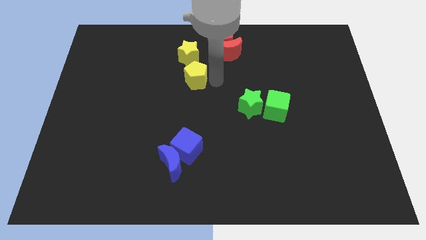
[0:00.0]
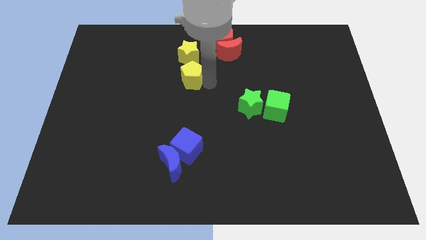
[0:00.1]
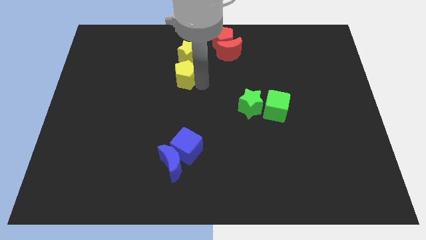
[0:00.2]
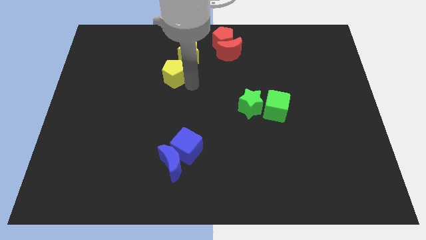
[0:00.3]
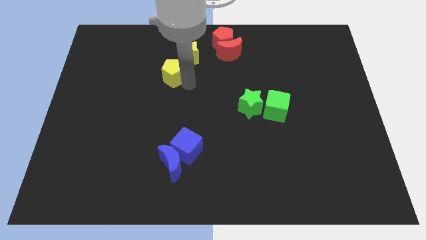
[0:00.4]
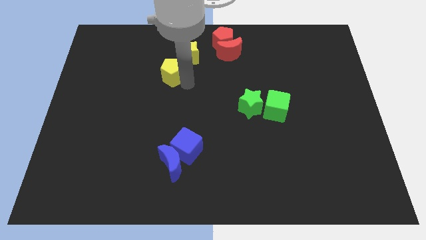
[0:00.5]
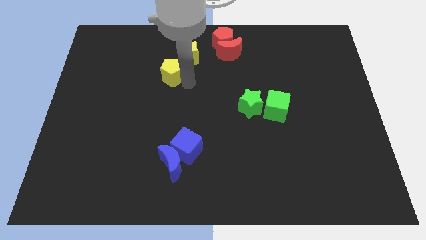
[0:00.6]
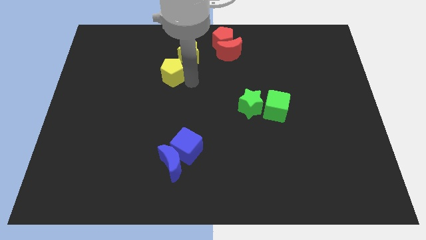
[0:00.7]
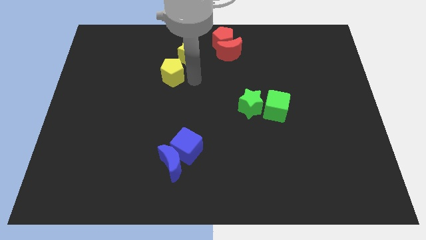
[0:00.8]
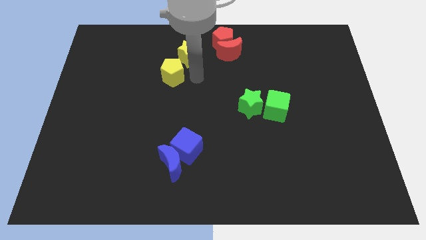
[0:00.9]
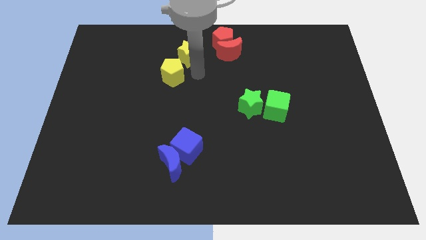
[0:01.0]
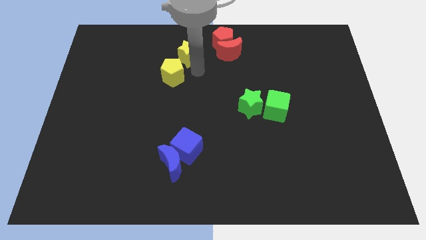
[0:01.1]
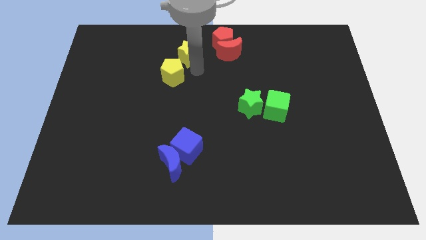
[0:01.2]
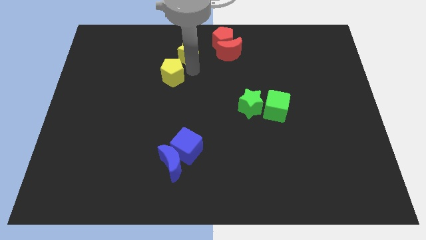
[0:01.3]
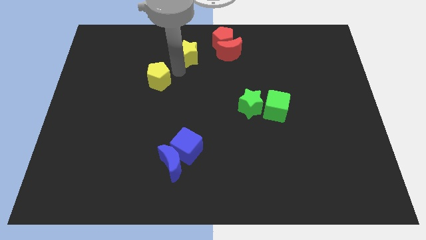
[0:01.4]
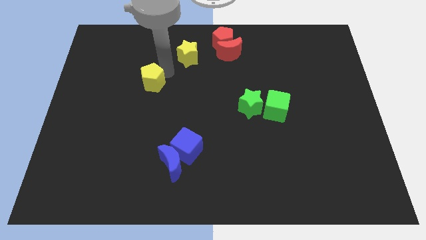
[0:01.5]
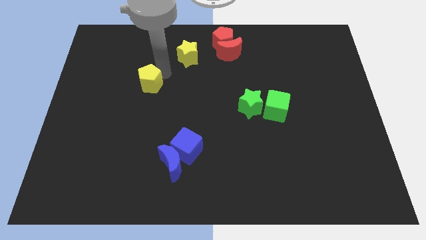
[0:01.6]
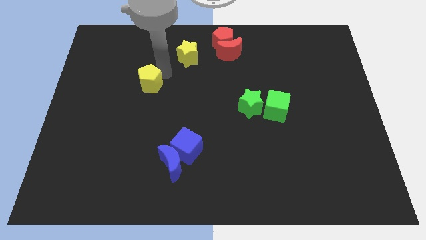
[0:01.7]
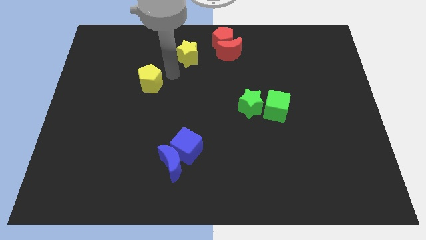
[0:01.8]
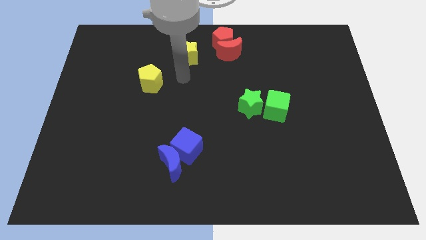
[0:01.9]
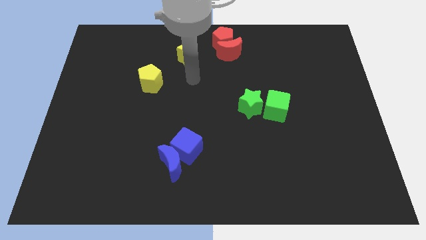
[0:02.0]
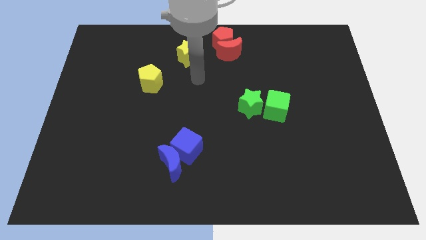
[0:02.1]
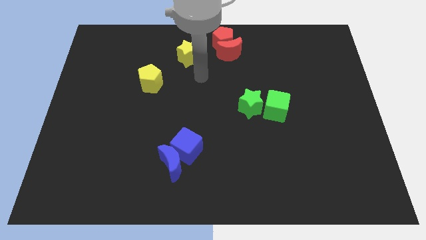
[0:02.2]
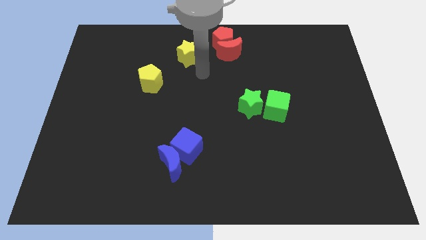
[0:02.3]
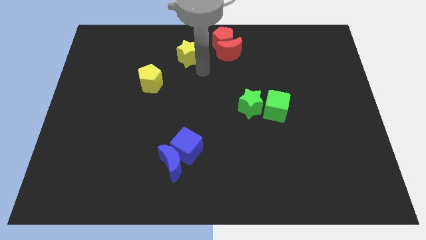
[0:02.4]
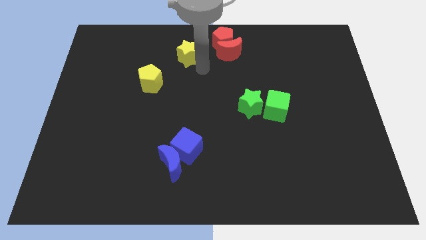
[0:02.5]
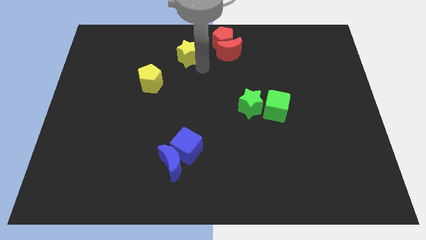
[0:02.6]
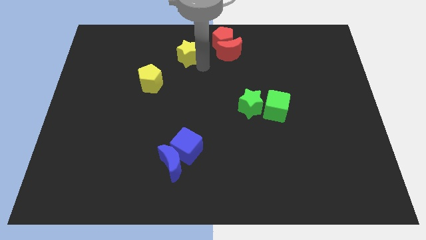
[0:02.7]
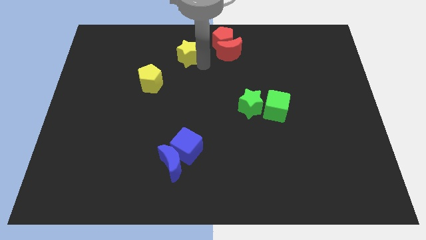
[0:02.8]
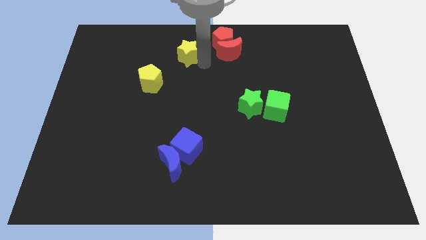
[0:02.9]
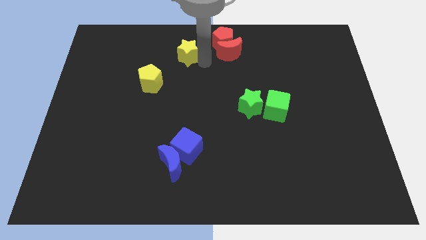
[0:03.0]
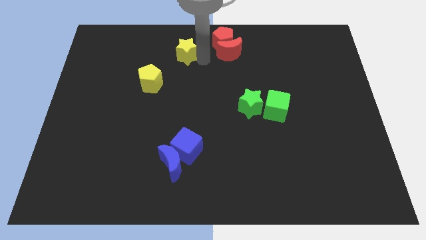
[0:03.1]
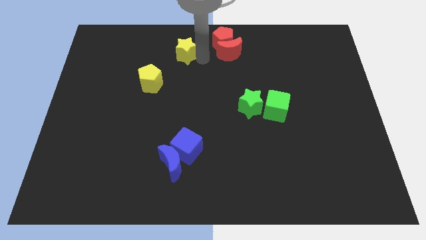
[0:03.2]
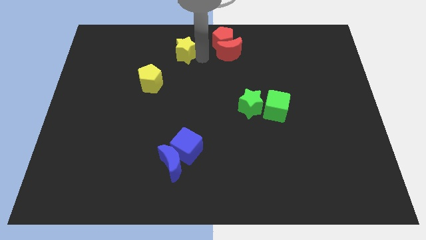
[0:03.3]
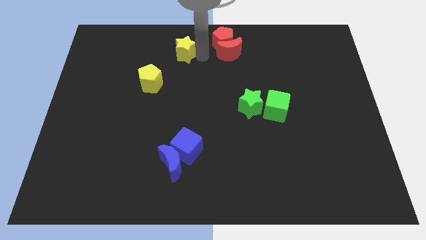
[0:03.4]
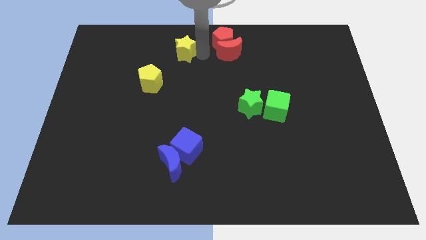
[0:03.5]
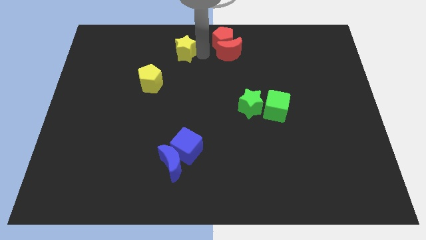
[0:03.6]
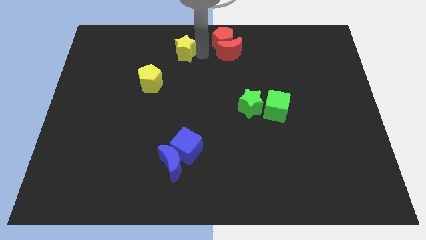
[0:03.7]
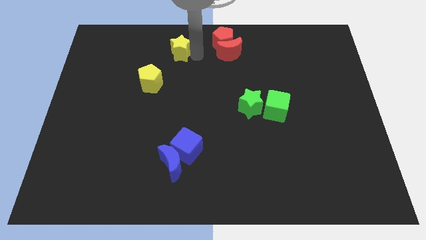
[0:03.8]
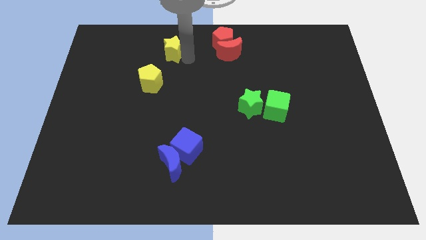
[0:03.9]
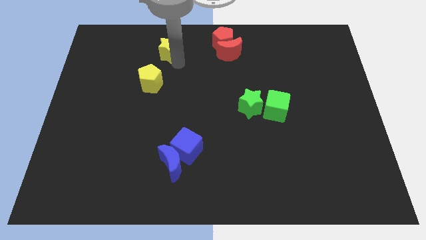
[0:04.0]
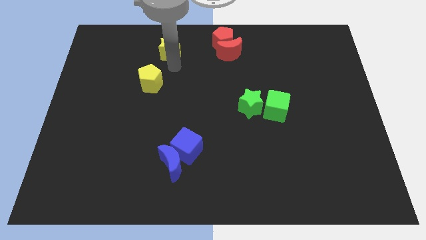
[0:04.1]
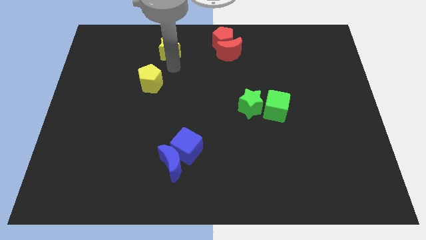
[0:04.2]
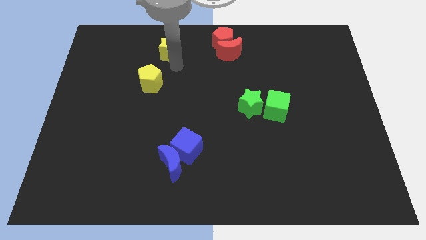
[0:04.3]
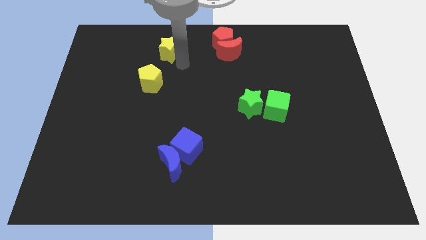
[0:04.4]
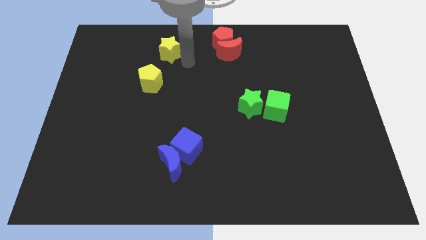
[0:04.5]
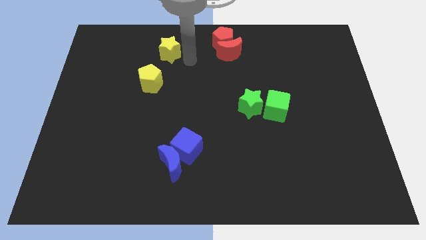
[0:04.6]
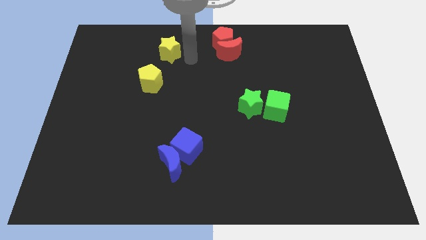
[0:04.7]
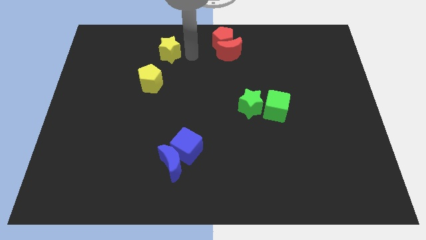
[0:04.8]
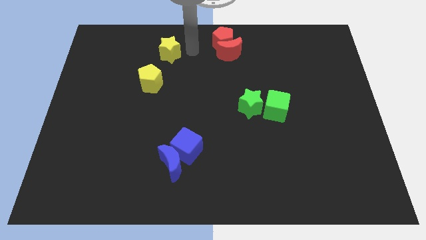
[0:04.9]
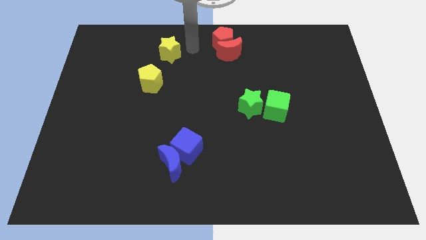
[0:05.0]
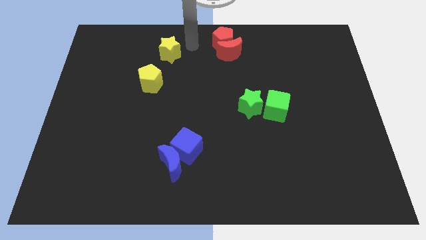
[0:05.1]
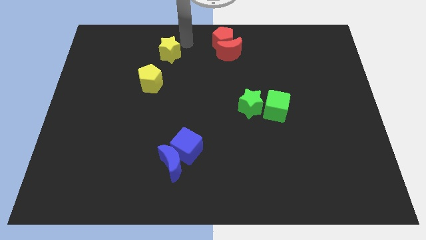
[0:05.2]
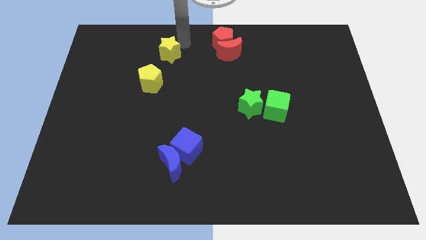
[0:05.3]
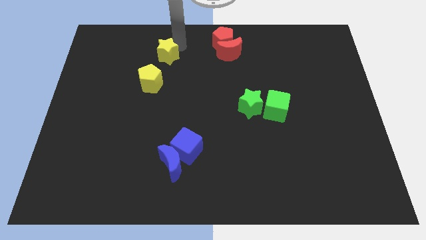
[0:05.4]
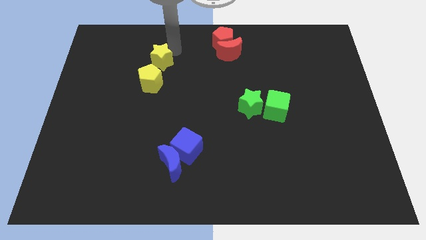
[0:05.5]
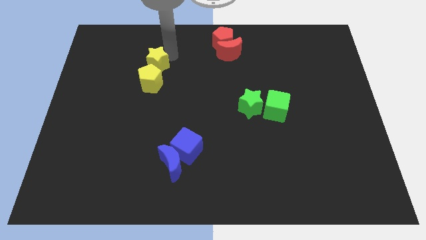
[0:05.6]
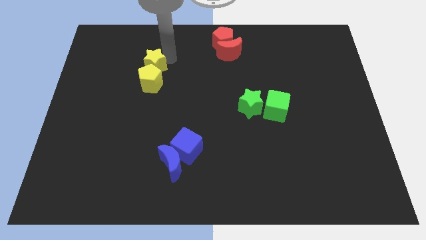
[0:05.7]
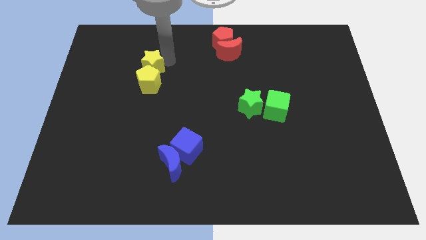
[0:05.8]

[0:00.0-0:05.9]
drag the yellow star vertically above the yellow pentagon

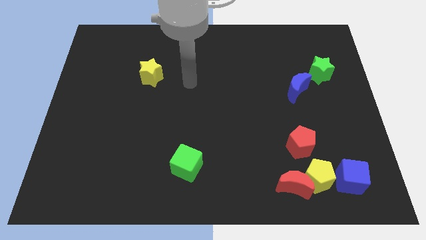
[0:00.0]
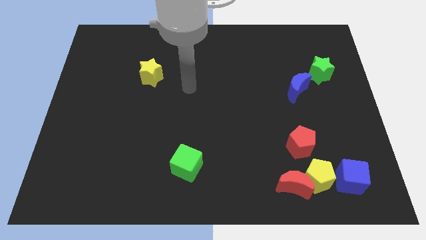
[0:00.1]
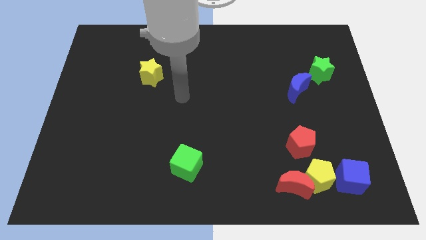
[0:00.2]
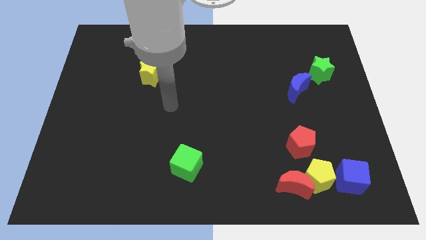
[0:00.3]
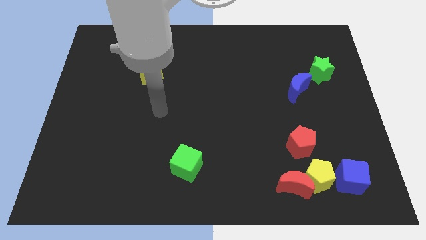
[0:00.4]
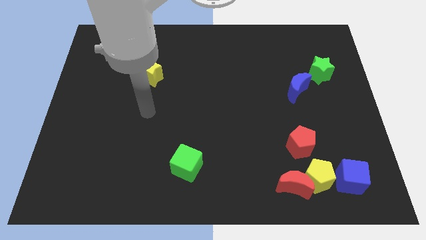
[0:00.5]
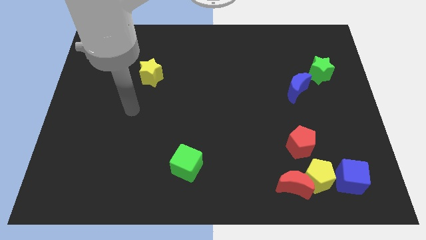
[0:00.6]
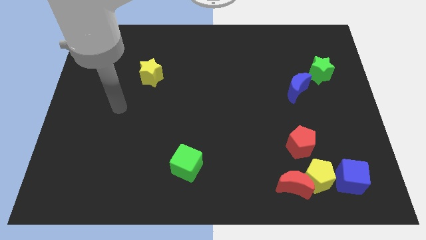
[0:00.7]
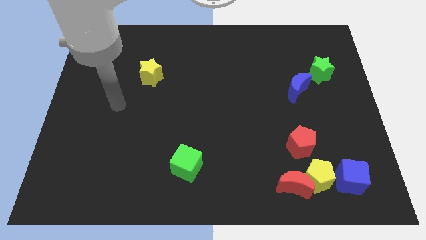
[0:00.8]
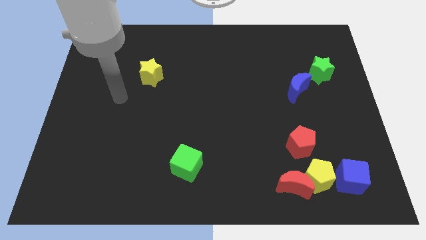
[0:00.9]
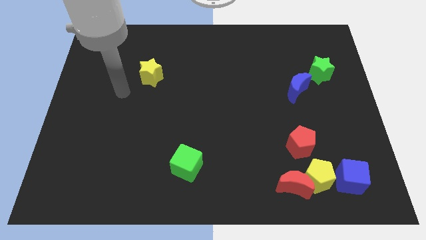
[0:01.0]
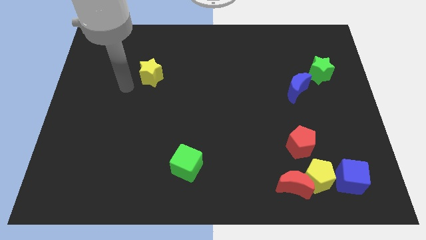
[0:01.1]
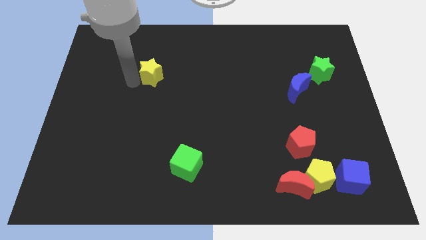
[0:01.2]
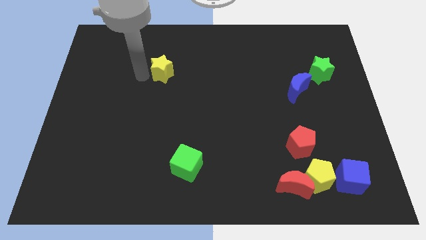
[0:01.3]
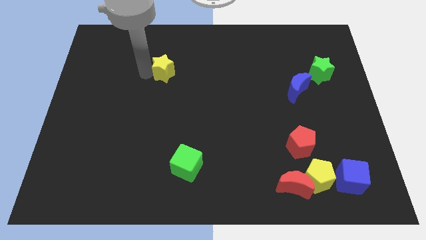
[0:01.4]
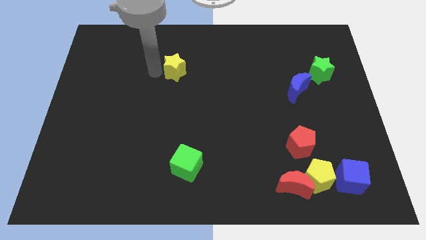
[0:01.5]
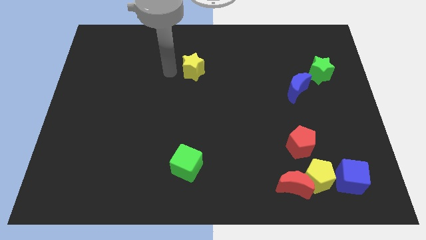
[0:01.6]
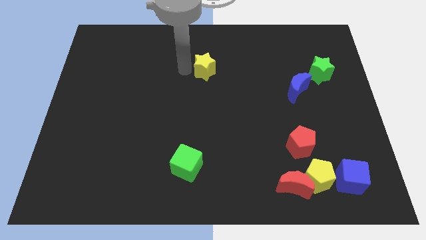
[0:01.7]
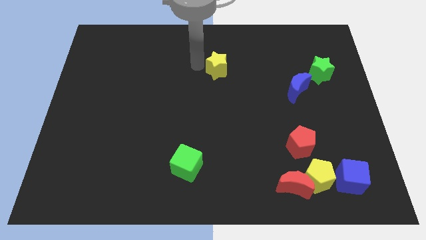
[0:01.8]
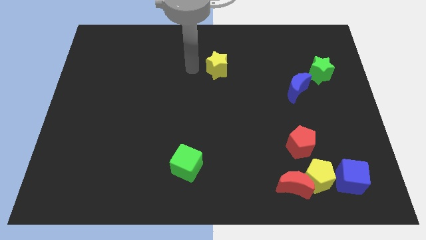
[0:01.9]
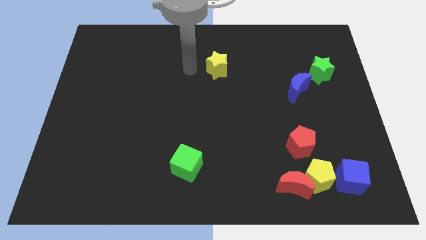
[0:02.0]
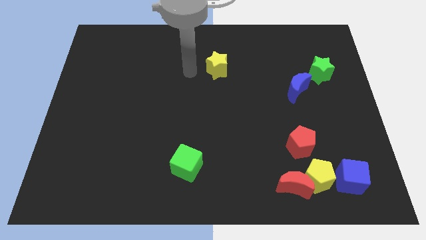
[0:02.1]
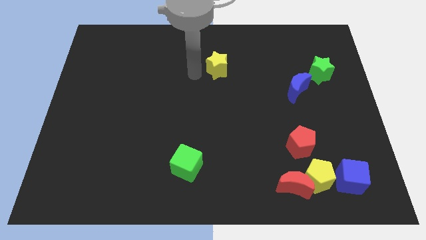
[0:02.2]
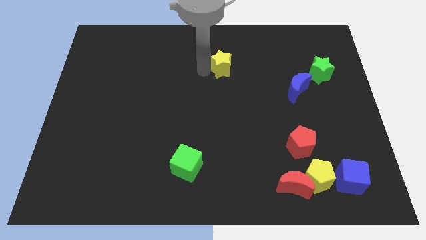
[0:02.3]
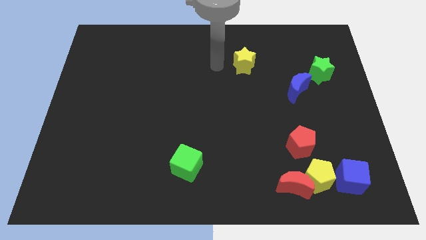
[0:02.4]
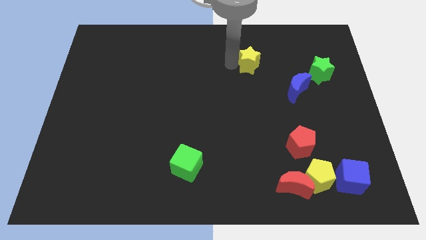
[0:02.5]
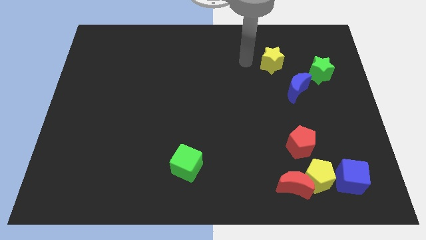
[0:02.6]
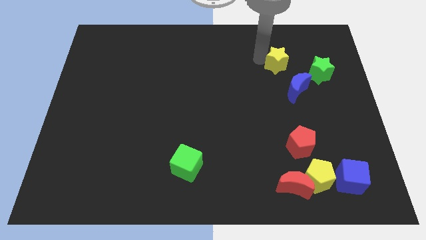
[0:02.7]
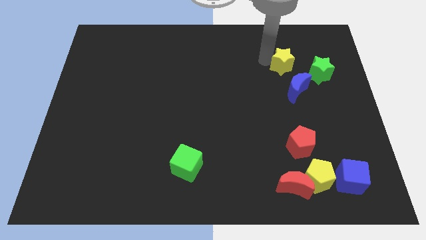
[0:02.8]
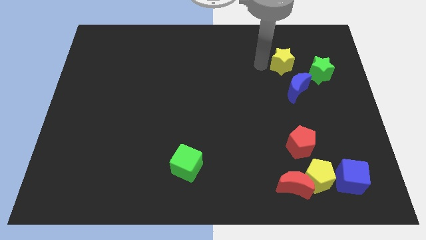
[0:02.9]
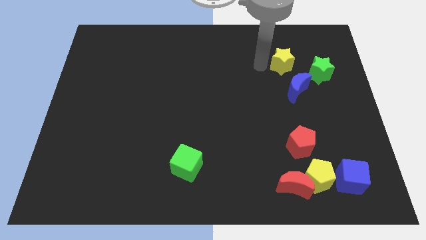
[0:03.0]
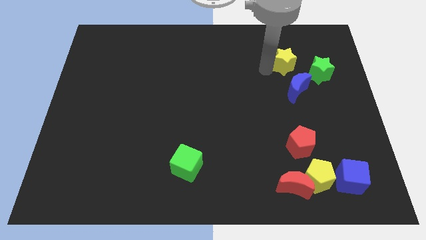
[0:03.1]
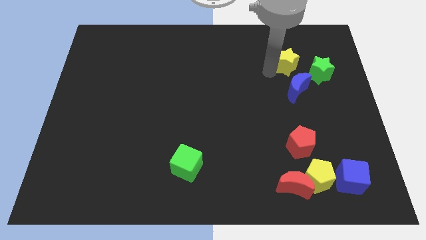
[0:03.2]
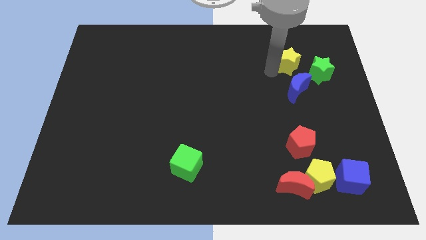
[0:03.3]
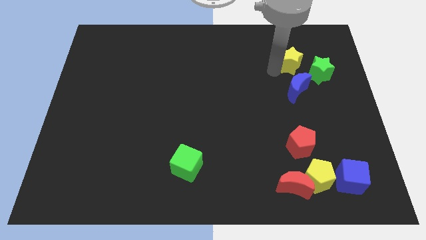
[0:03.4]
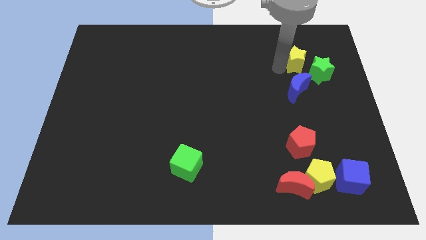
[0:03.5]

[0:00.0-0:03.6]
push the yellow star to the right side of the board
